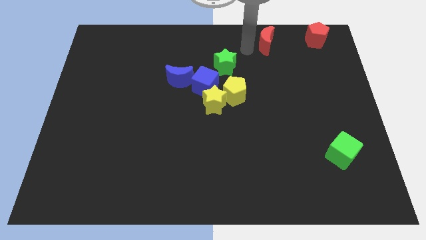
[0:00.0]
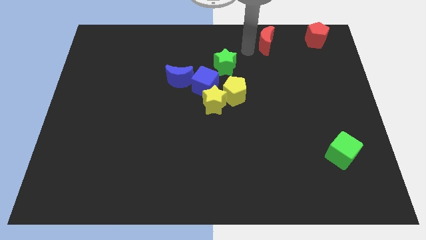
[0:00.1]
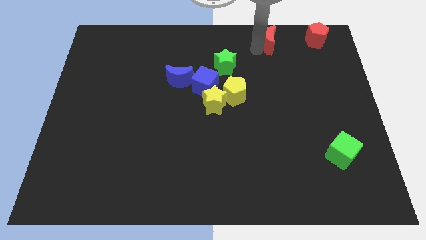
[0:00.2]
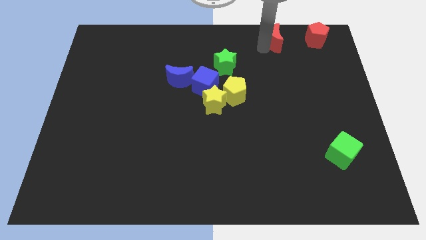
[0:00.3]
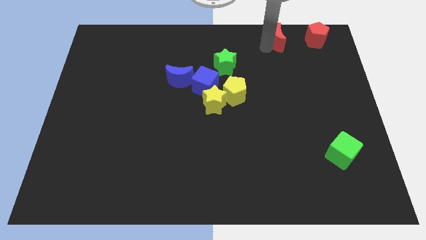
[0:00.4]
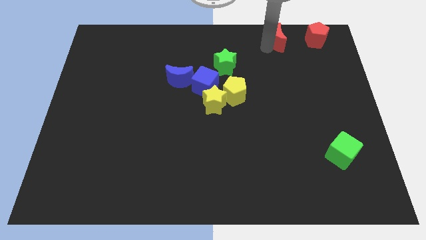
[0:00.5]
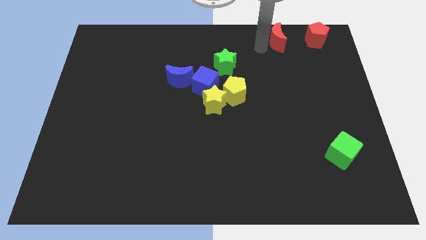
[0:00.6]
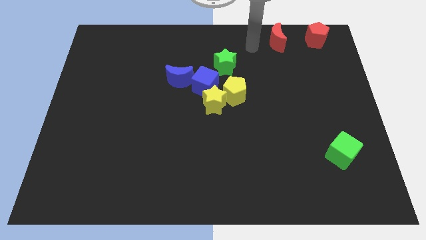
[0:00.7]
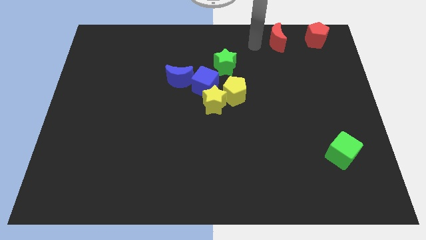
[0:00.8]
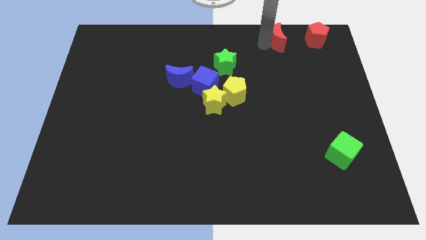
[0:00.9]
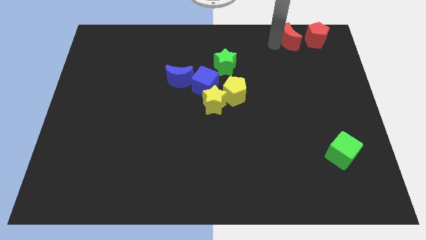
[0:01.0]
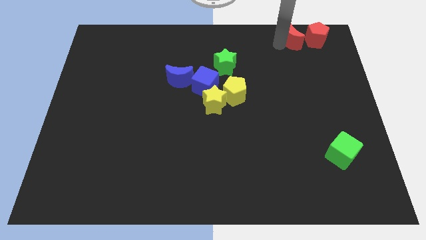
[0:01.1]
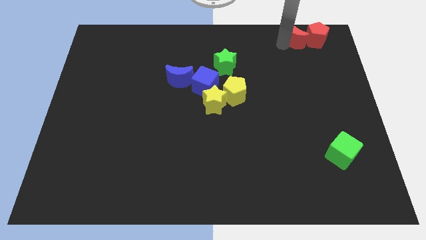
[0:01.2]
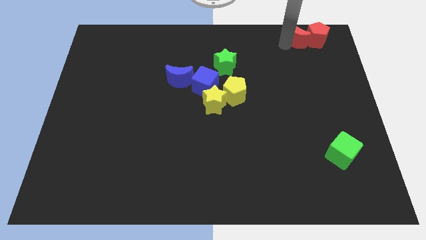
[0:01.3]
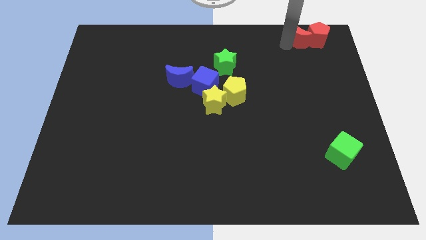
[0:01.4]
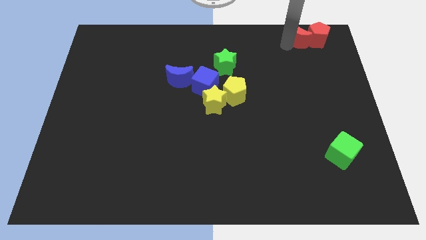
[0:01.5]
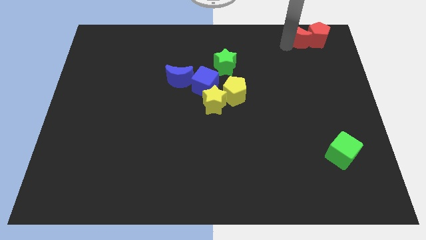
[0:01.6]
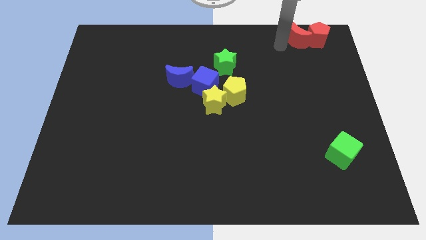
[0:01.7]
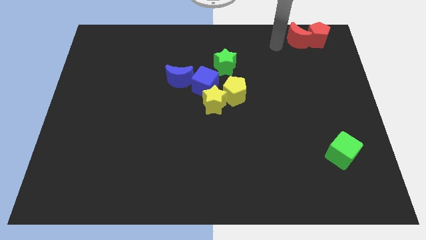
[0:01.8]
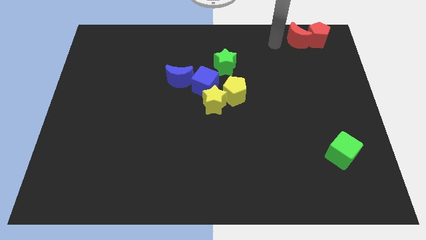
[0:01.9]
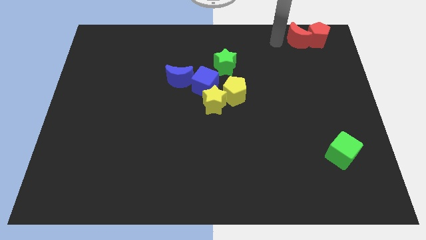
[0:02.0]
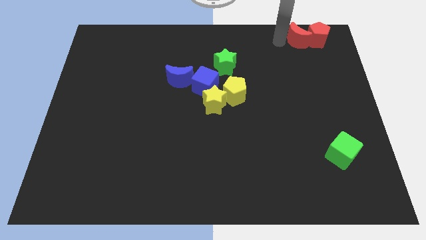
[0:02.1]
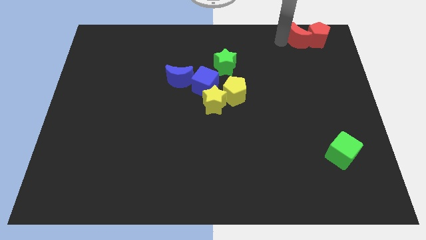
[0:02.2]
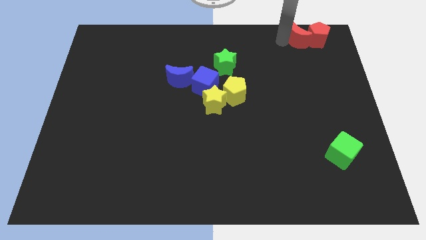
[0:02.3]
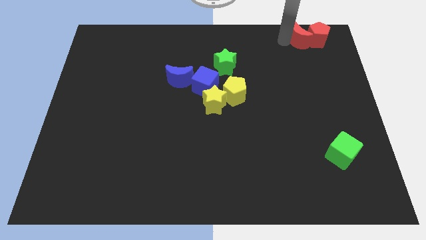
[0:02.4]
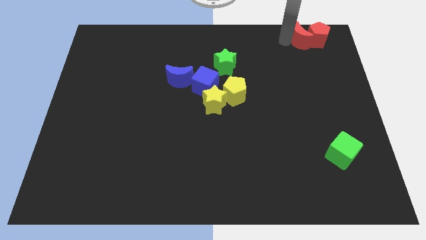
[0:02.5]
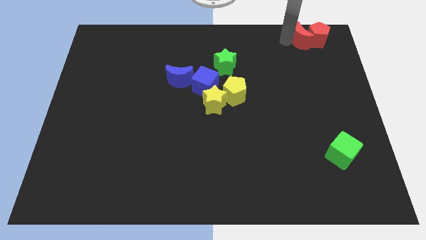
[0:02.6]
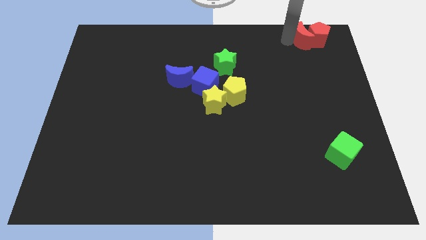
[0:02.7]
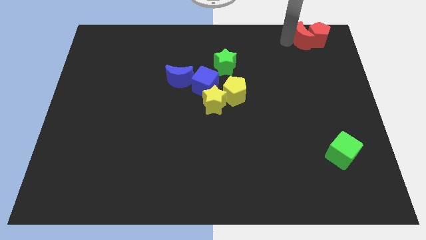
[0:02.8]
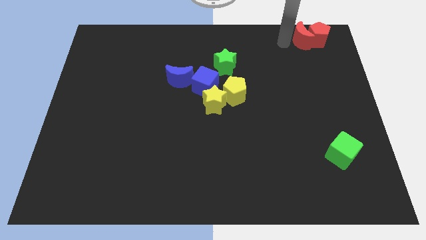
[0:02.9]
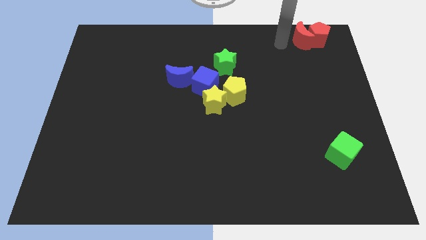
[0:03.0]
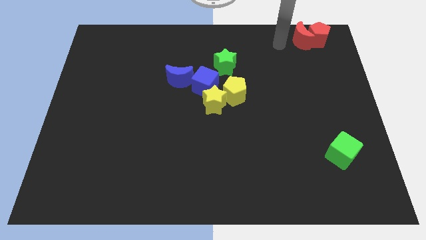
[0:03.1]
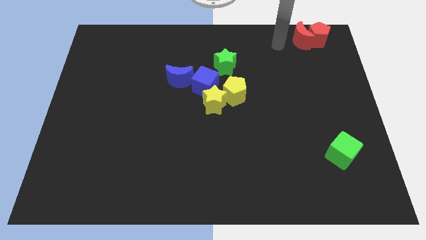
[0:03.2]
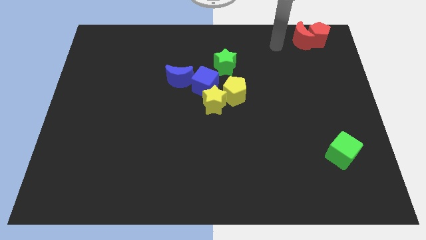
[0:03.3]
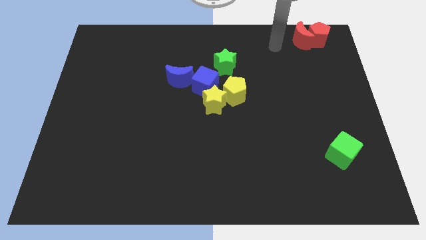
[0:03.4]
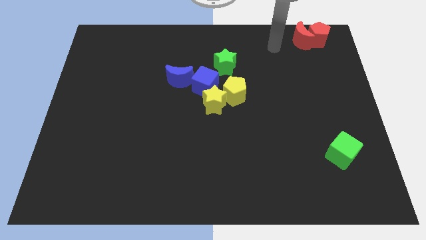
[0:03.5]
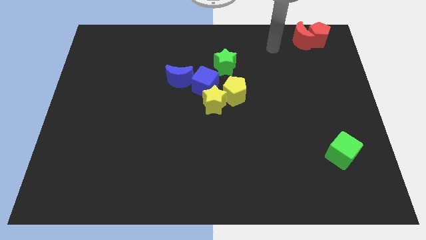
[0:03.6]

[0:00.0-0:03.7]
push the red crescent into red pentagon

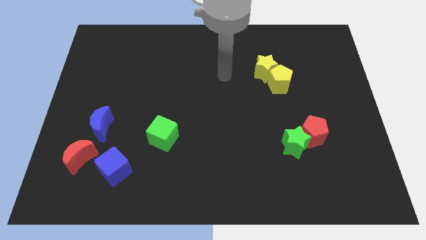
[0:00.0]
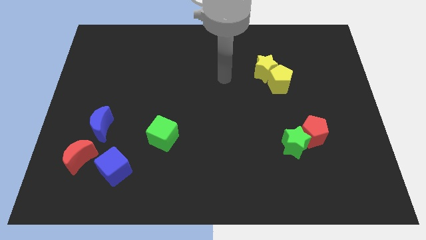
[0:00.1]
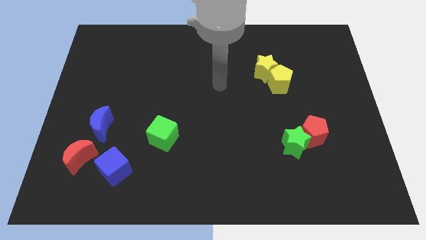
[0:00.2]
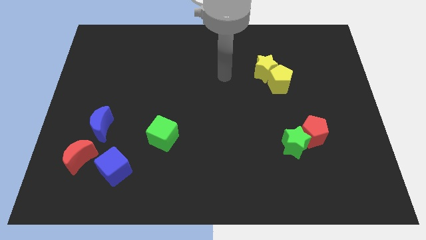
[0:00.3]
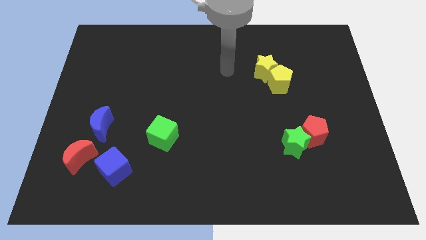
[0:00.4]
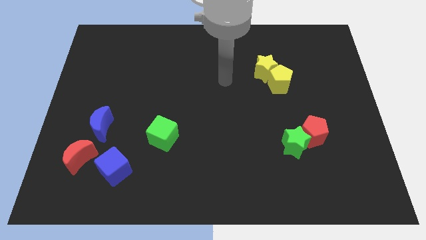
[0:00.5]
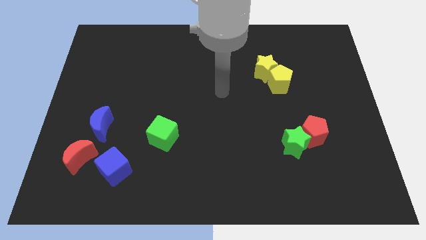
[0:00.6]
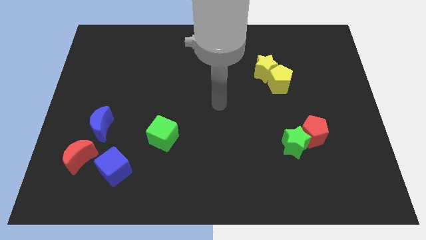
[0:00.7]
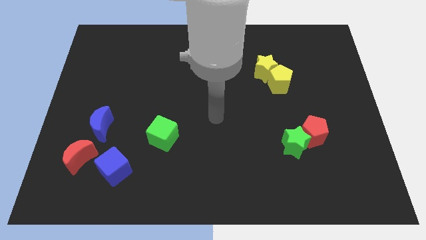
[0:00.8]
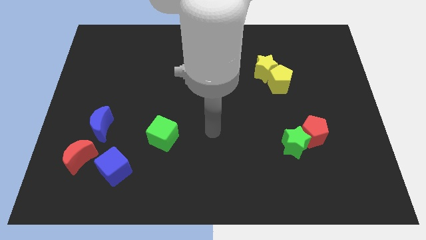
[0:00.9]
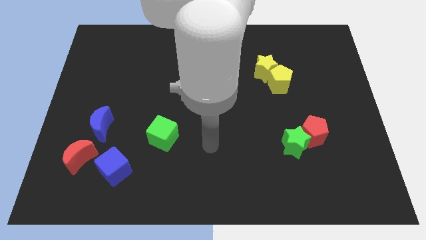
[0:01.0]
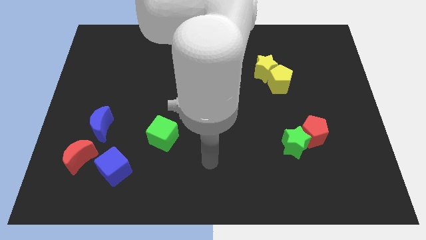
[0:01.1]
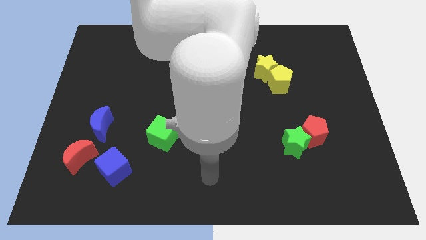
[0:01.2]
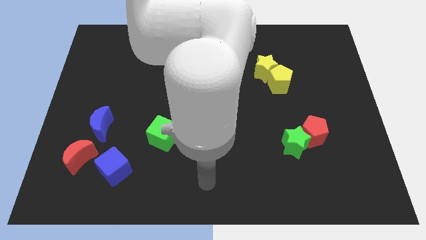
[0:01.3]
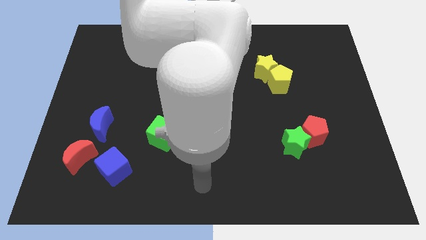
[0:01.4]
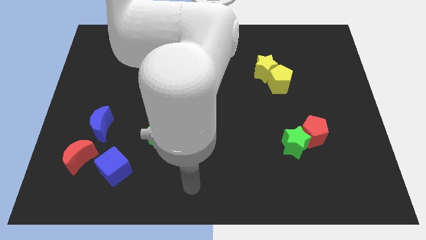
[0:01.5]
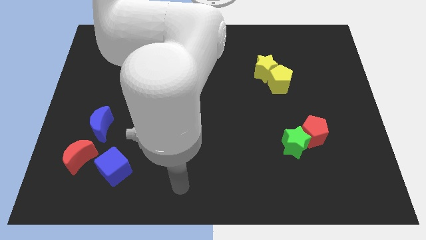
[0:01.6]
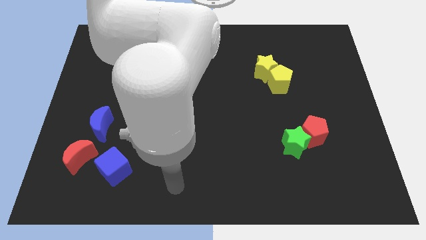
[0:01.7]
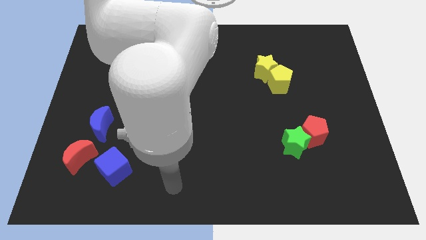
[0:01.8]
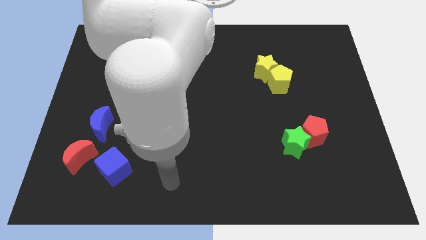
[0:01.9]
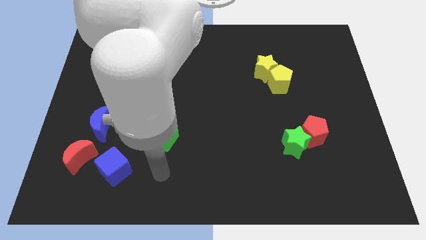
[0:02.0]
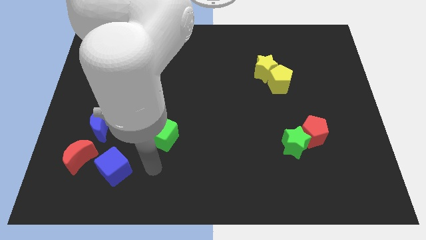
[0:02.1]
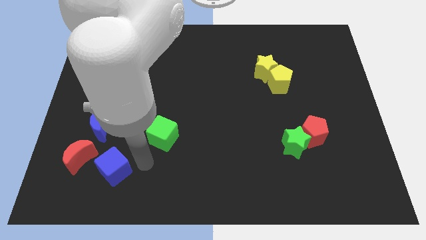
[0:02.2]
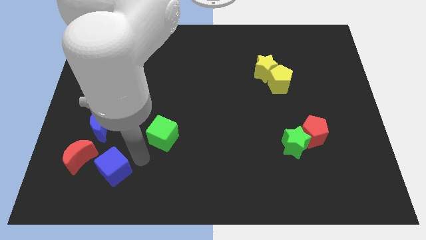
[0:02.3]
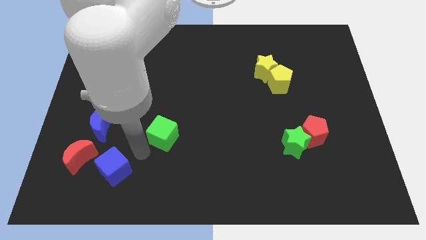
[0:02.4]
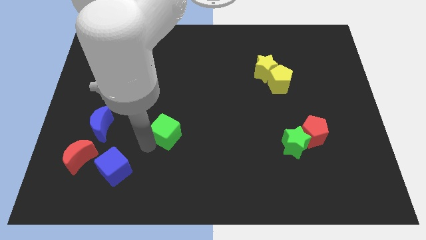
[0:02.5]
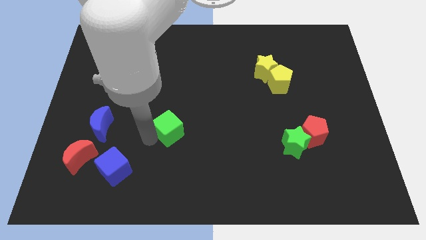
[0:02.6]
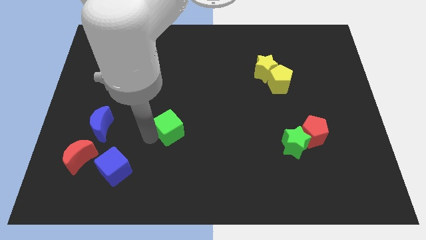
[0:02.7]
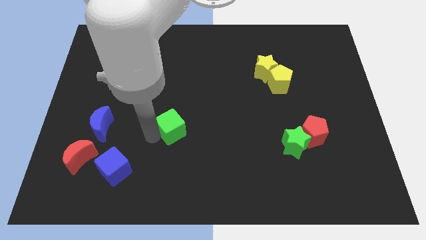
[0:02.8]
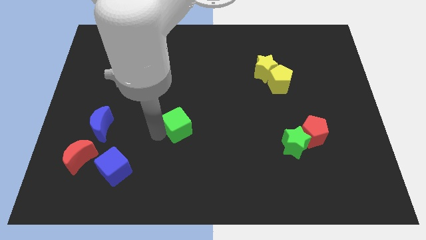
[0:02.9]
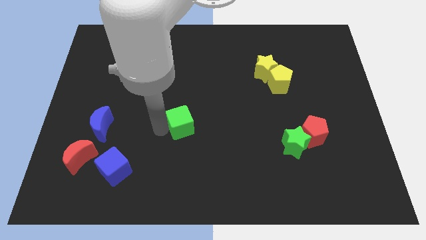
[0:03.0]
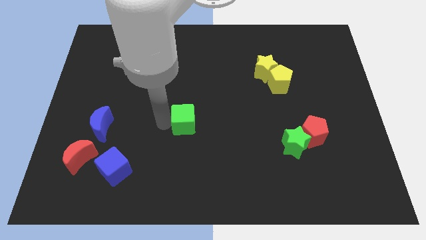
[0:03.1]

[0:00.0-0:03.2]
push the green cube slightly to the center

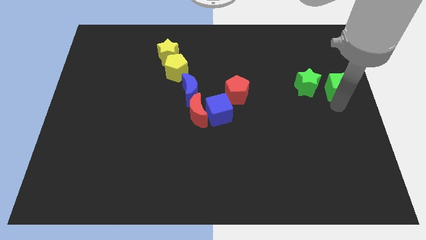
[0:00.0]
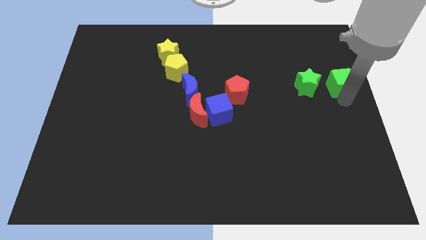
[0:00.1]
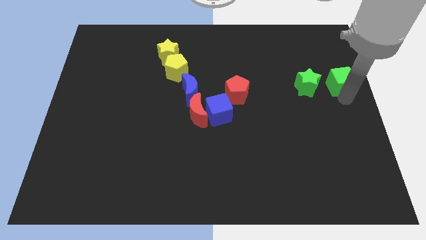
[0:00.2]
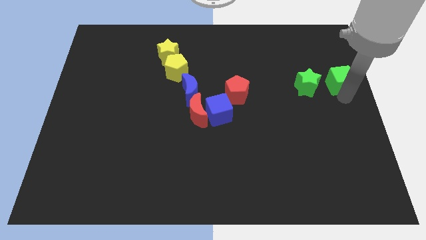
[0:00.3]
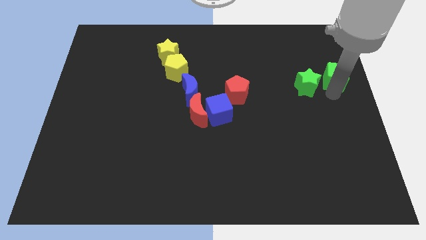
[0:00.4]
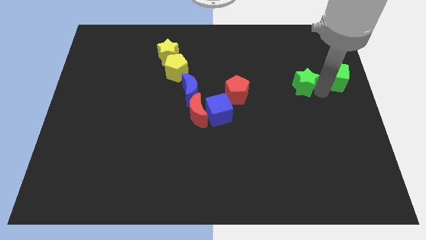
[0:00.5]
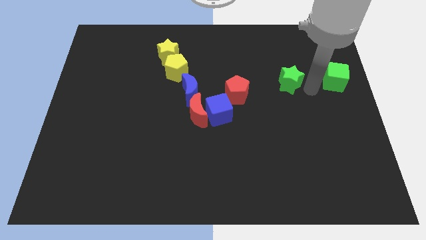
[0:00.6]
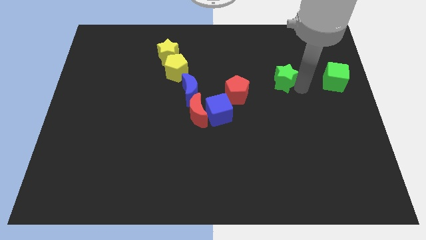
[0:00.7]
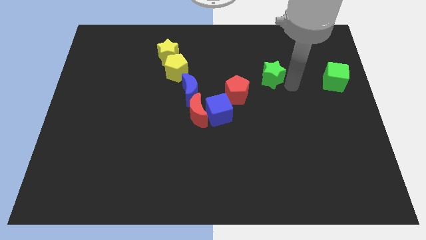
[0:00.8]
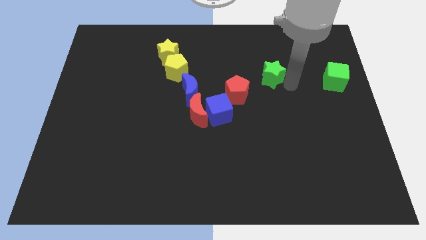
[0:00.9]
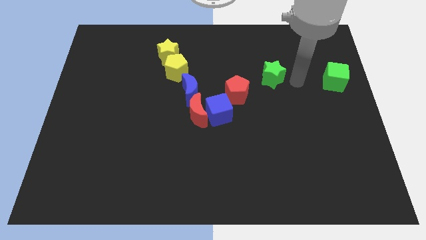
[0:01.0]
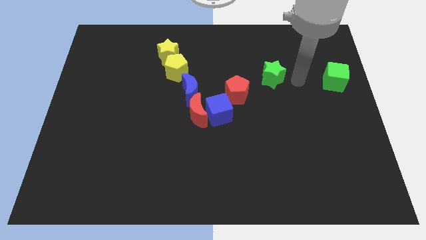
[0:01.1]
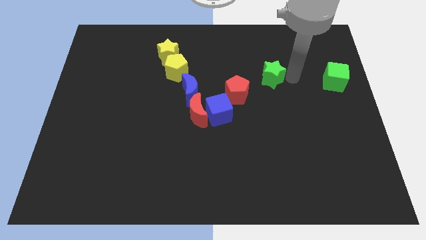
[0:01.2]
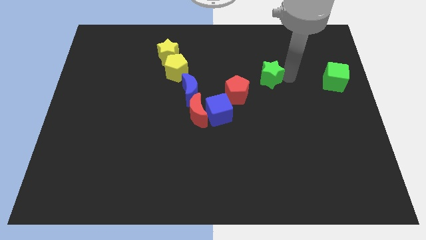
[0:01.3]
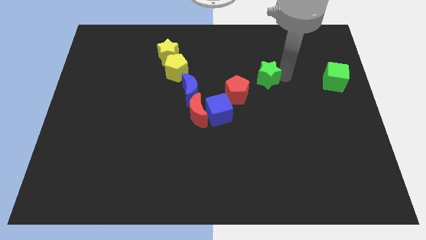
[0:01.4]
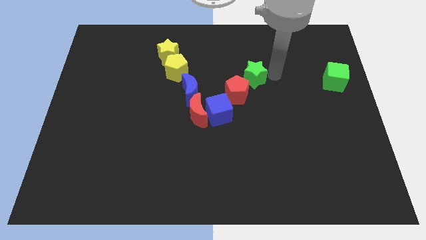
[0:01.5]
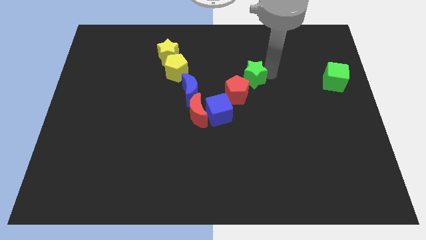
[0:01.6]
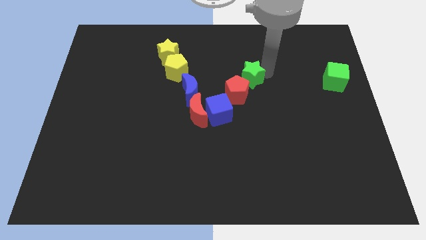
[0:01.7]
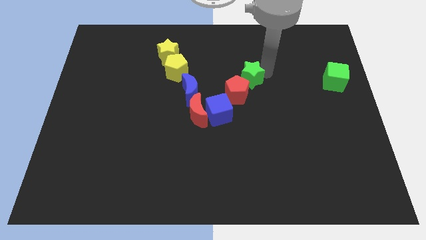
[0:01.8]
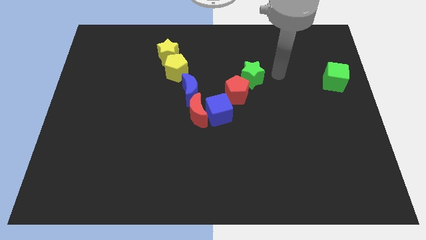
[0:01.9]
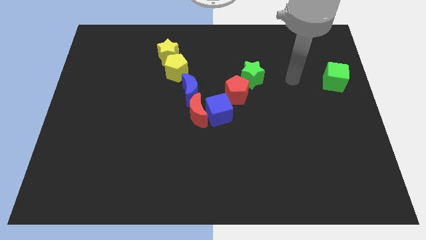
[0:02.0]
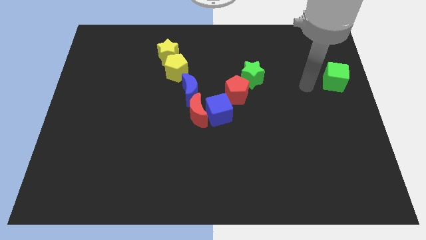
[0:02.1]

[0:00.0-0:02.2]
push the green star to the top right of the red pentagon
